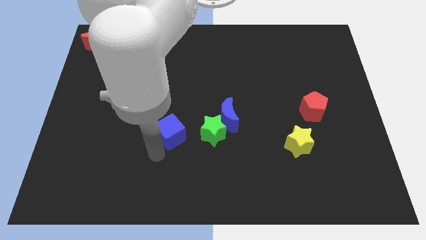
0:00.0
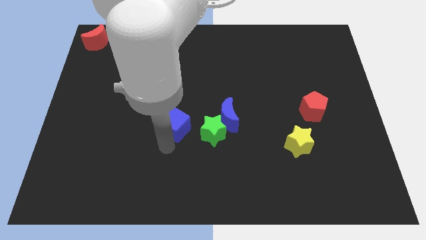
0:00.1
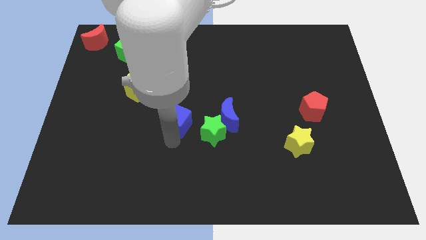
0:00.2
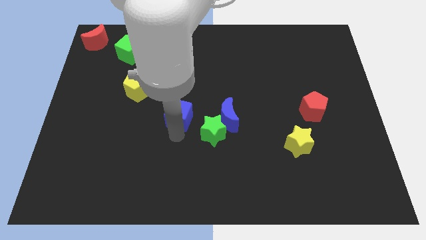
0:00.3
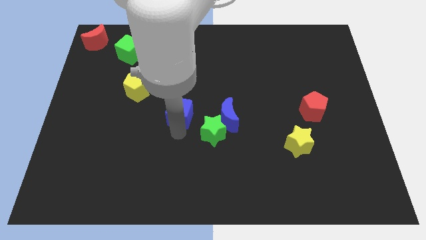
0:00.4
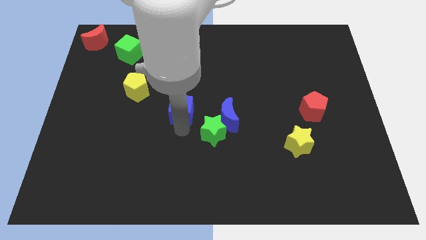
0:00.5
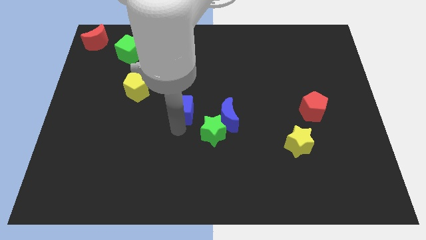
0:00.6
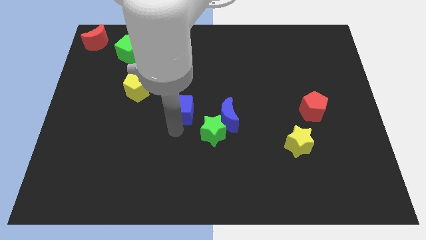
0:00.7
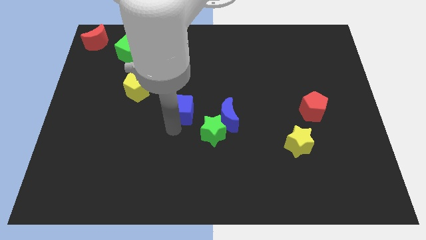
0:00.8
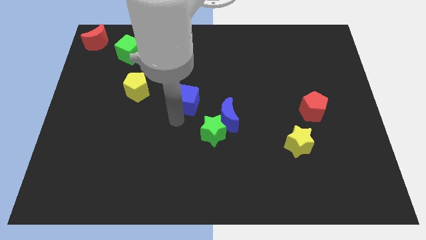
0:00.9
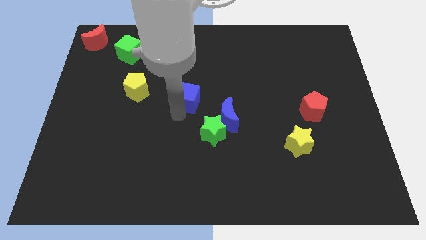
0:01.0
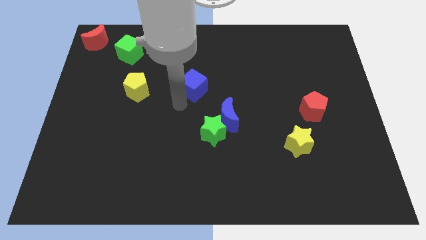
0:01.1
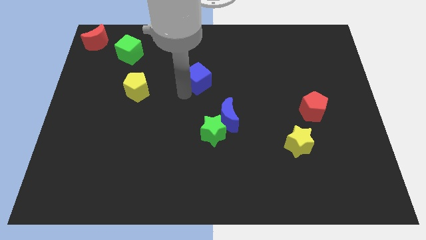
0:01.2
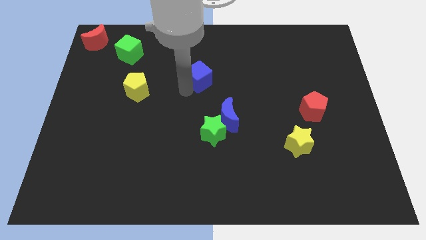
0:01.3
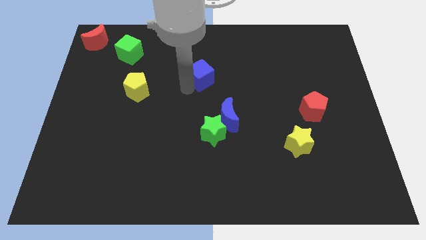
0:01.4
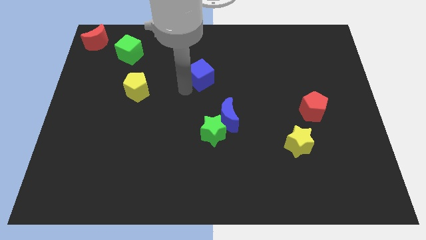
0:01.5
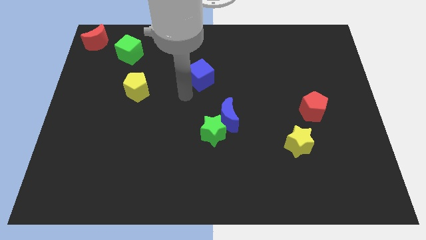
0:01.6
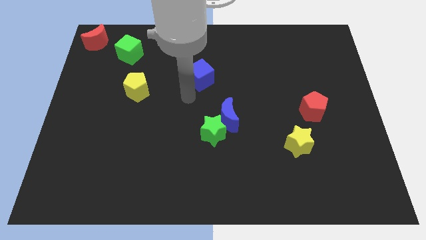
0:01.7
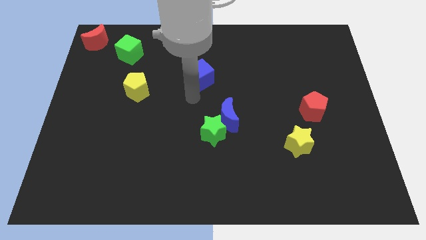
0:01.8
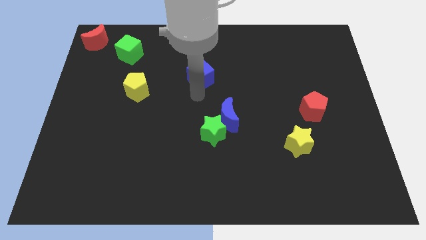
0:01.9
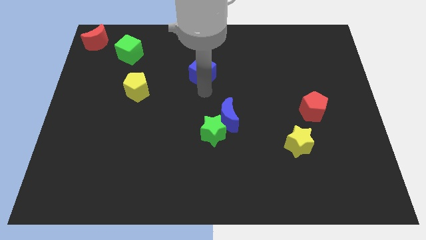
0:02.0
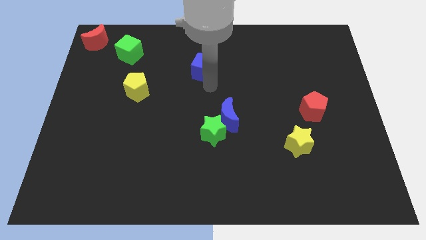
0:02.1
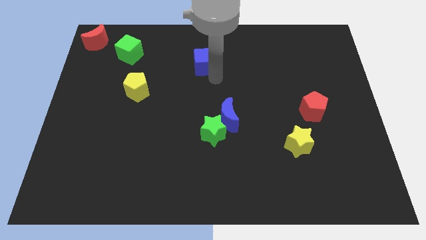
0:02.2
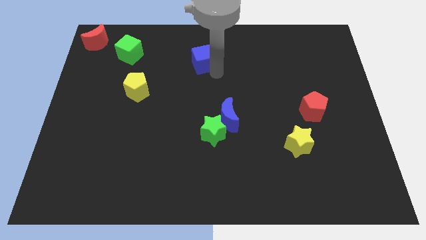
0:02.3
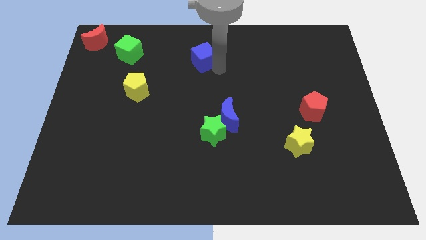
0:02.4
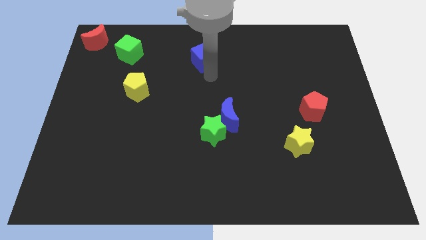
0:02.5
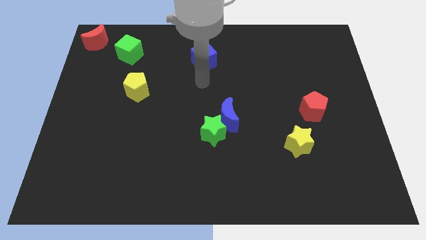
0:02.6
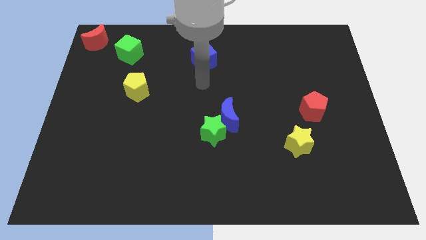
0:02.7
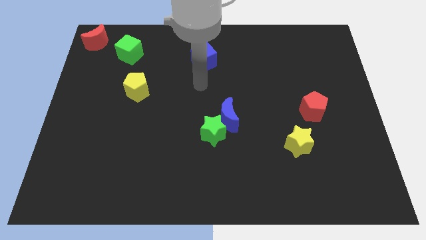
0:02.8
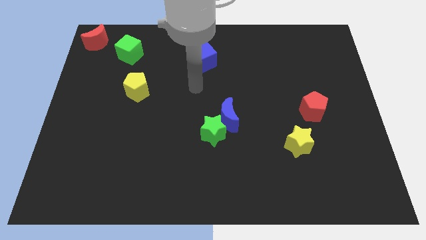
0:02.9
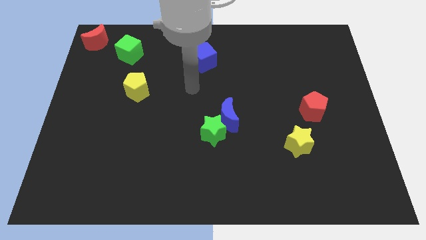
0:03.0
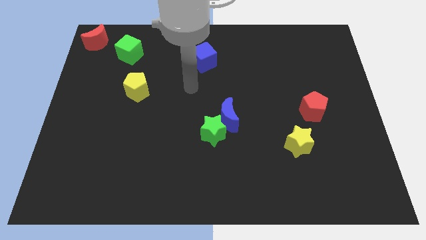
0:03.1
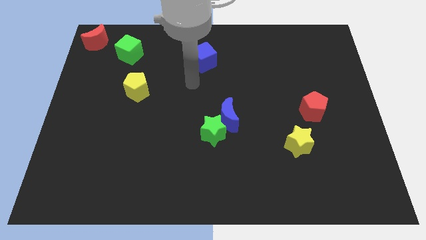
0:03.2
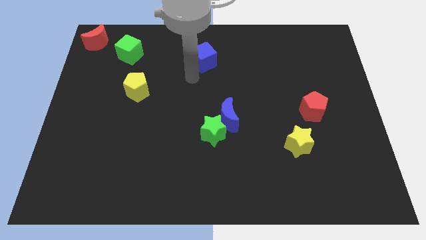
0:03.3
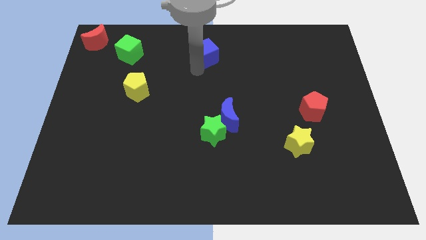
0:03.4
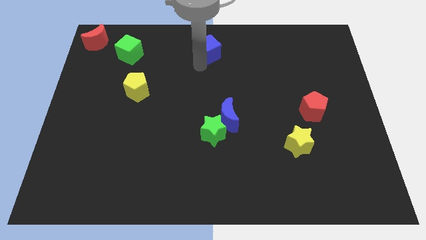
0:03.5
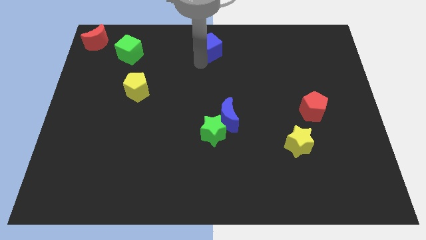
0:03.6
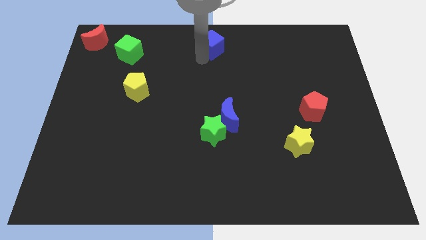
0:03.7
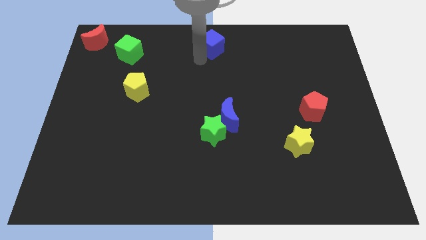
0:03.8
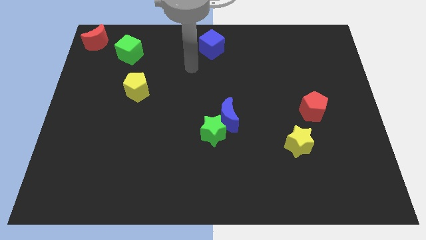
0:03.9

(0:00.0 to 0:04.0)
move blue cube towards the top center of the board

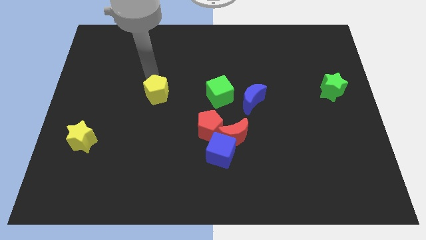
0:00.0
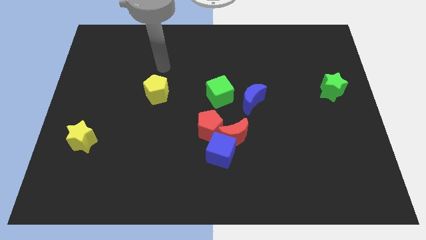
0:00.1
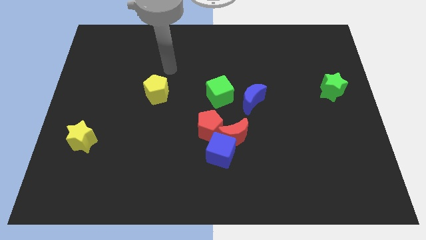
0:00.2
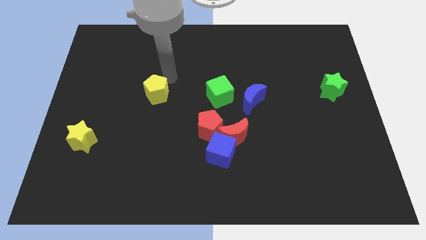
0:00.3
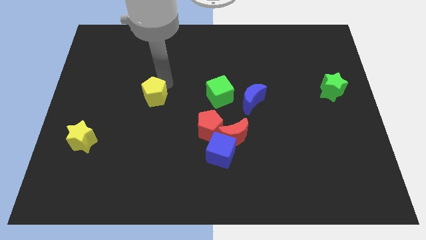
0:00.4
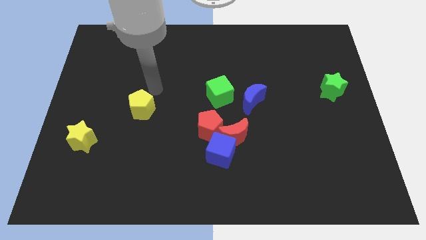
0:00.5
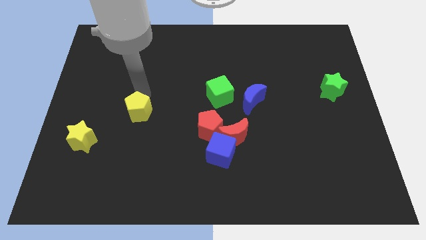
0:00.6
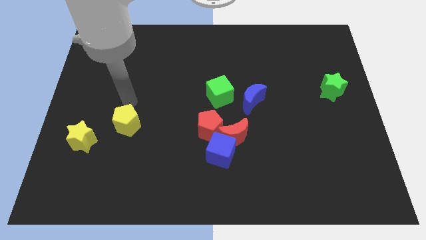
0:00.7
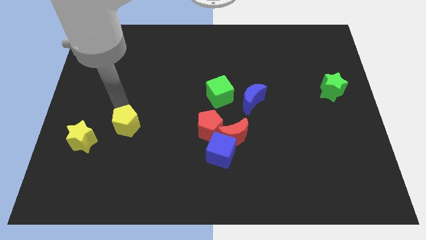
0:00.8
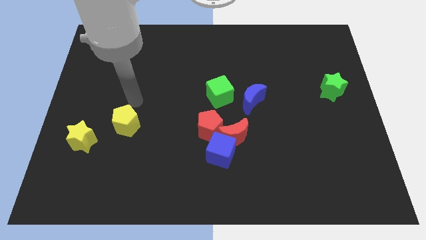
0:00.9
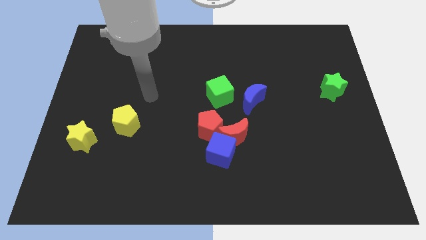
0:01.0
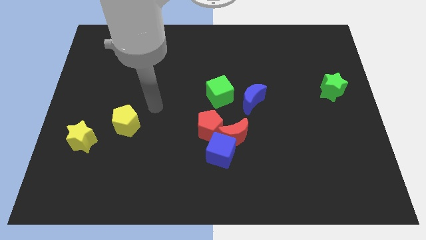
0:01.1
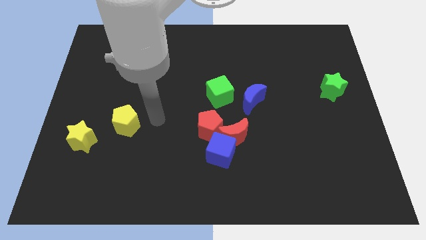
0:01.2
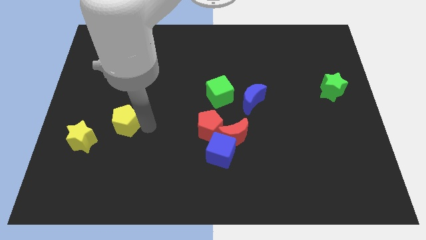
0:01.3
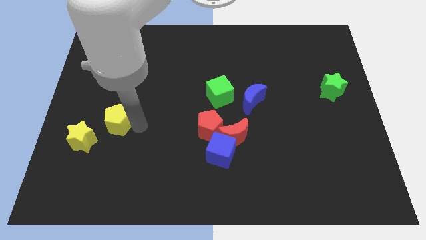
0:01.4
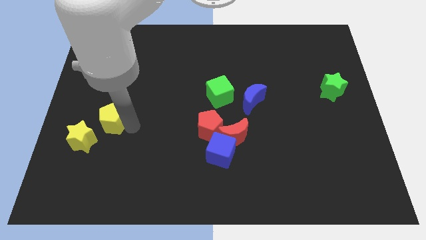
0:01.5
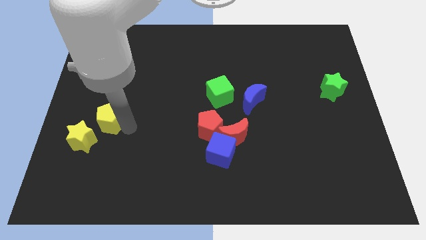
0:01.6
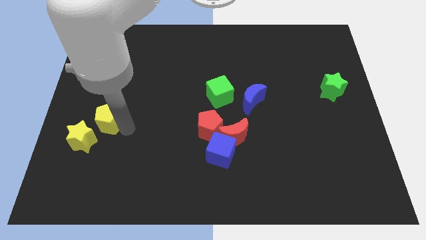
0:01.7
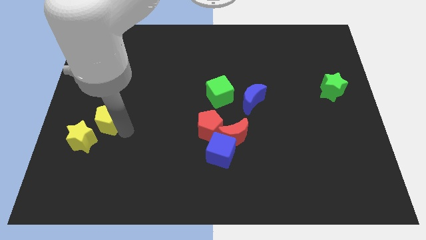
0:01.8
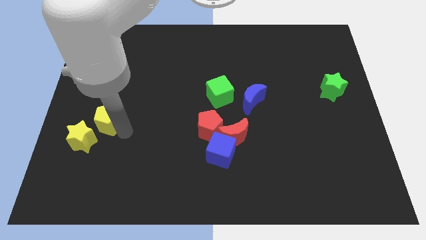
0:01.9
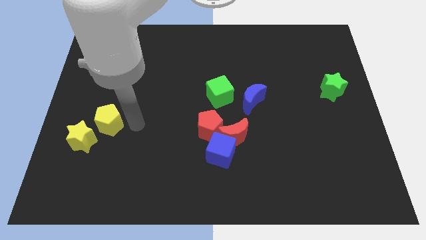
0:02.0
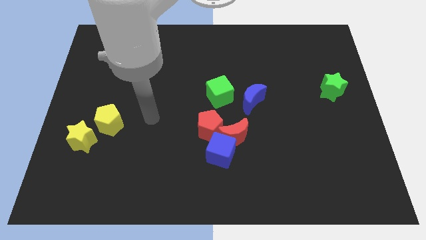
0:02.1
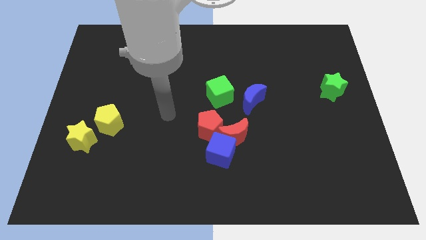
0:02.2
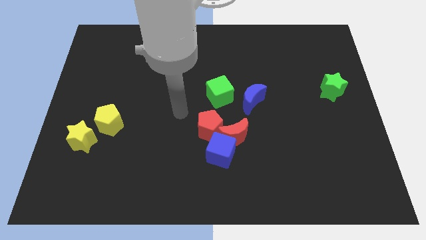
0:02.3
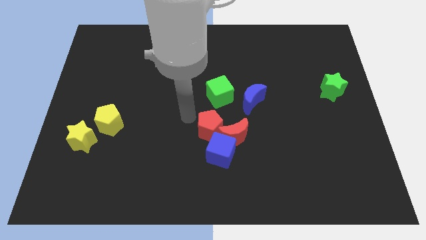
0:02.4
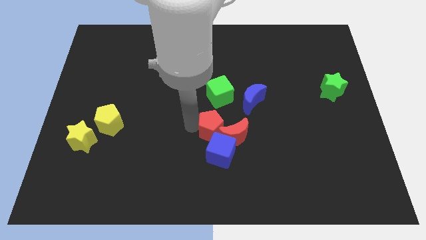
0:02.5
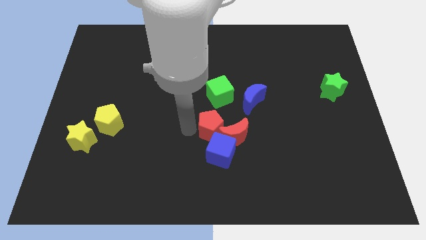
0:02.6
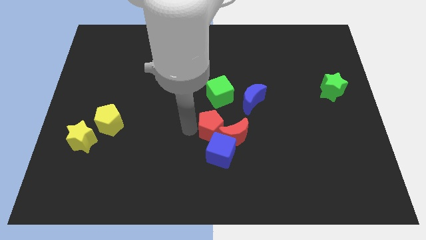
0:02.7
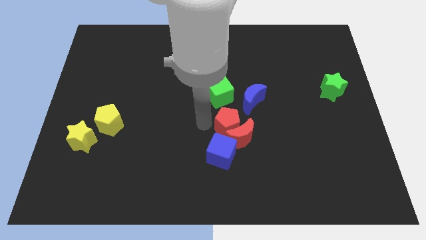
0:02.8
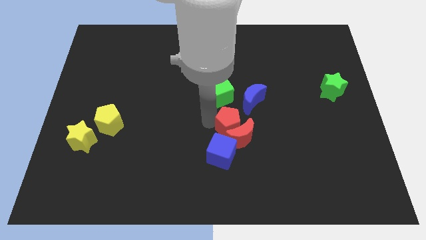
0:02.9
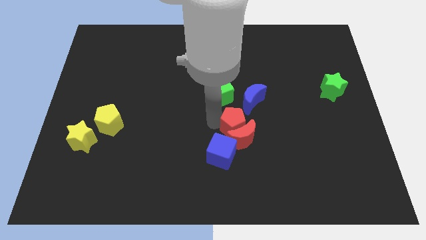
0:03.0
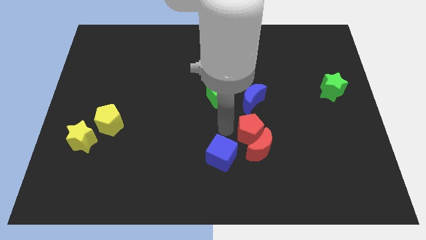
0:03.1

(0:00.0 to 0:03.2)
push red pentagon below green cube

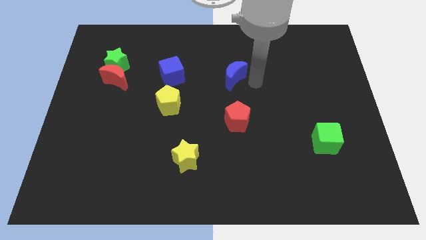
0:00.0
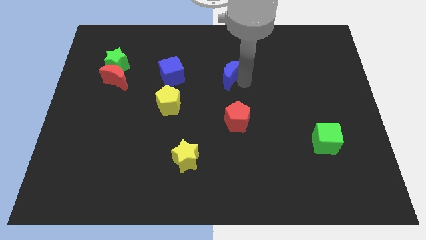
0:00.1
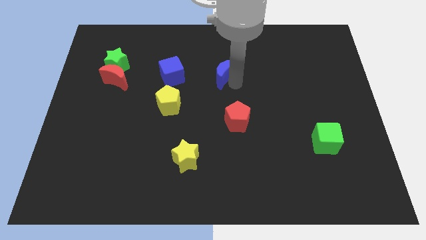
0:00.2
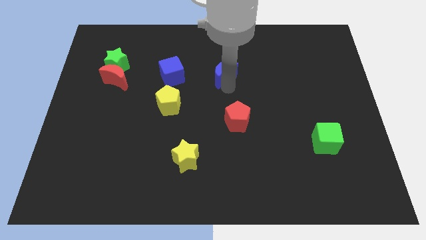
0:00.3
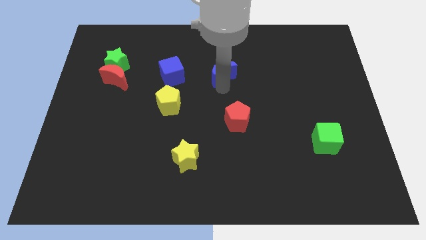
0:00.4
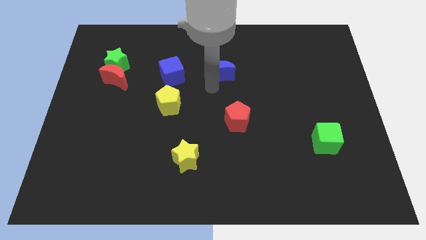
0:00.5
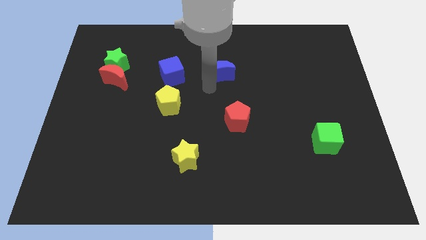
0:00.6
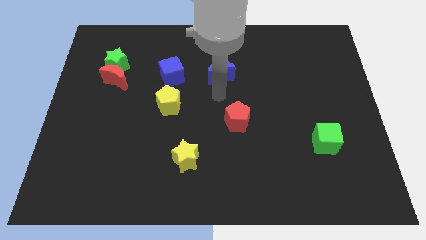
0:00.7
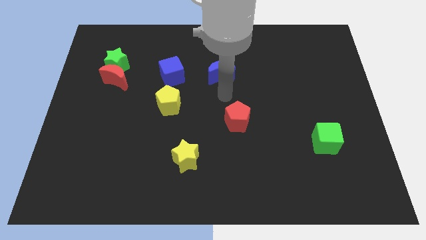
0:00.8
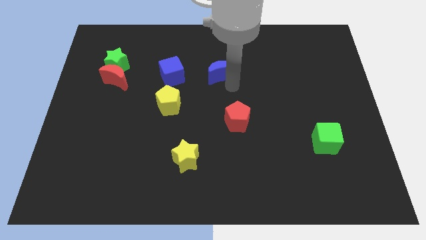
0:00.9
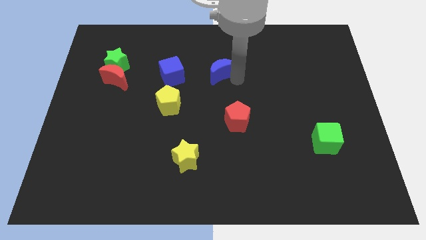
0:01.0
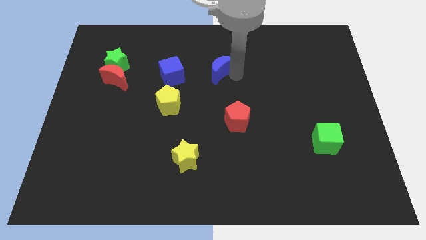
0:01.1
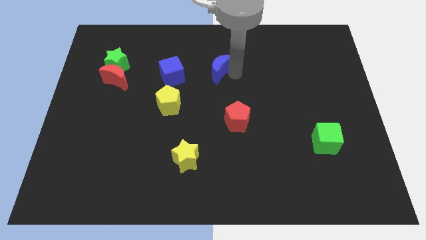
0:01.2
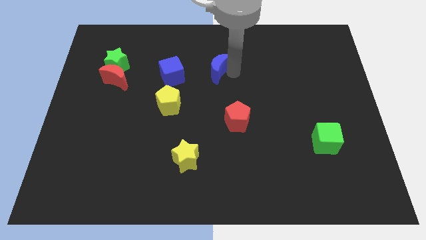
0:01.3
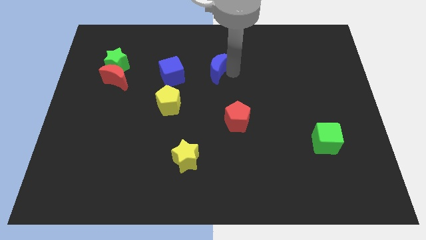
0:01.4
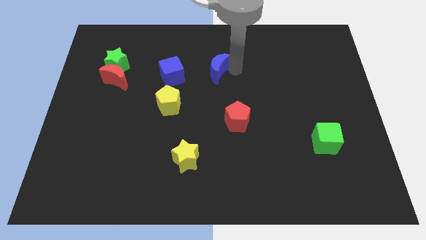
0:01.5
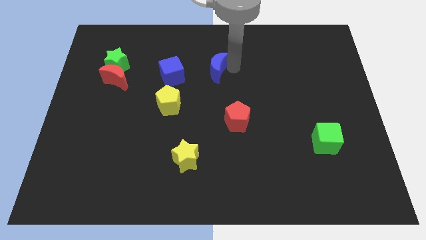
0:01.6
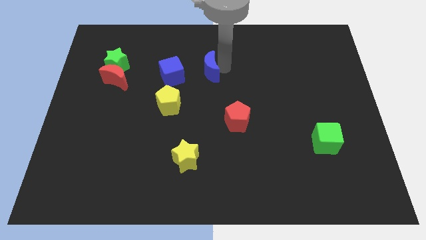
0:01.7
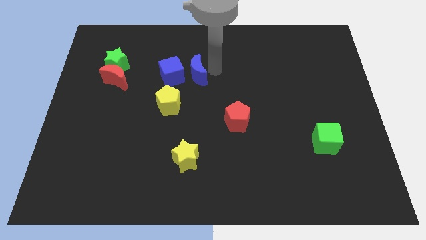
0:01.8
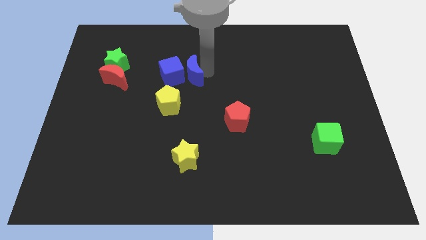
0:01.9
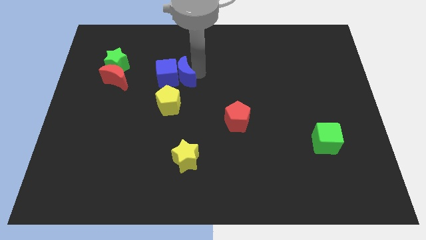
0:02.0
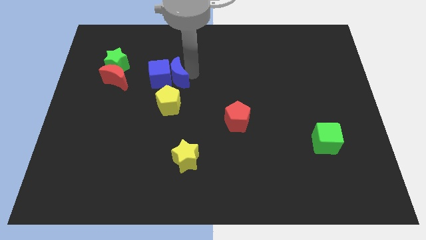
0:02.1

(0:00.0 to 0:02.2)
push the blue moon into the blue cube
